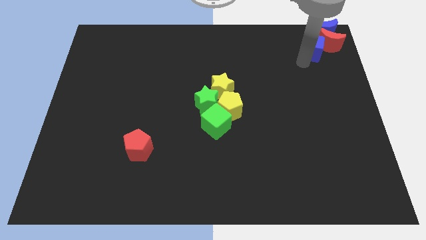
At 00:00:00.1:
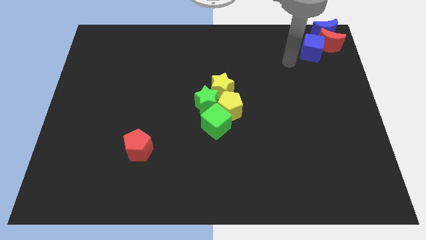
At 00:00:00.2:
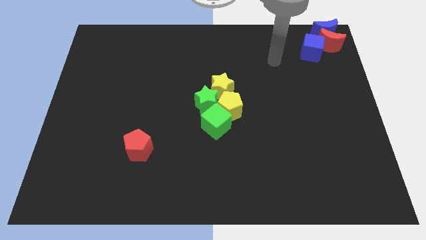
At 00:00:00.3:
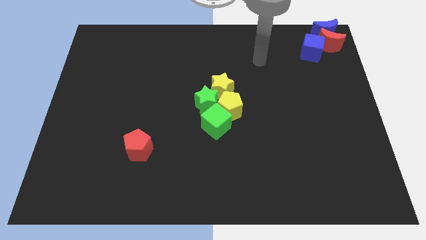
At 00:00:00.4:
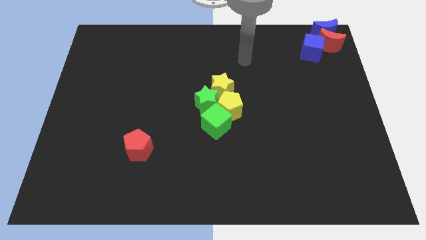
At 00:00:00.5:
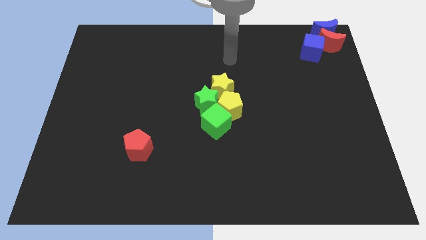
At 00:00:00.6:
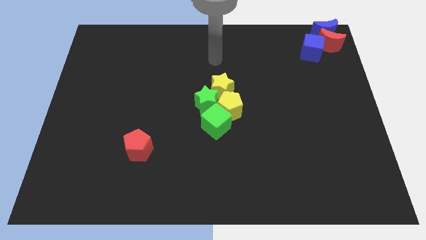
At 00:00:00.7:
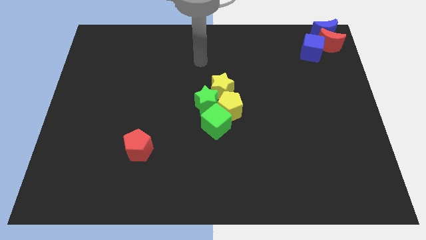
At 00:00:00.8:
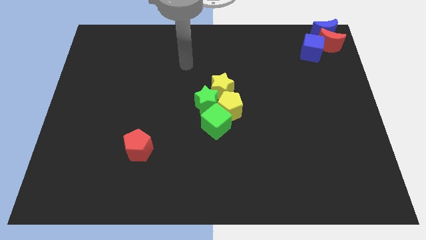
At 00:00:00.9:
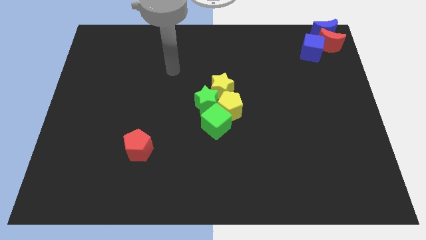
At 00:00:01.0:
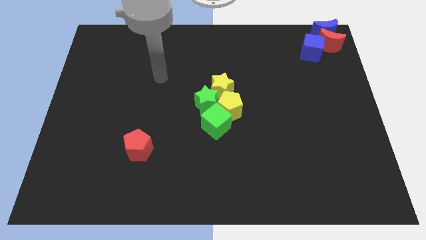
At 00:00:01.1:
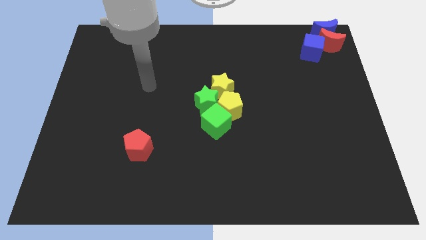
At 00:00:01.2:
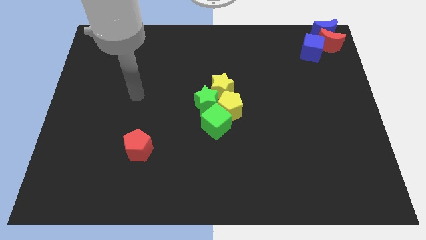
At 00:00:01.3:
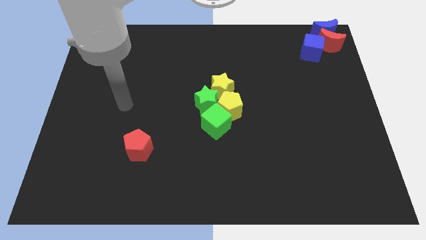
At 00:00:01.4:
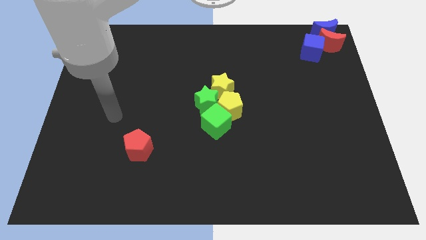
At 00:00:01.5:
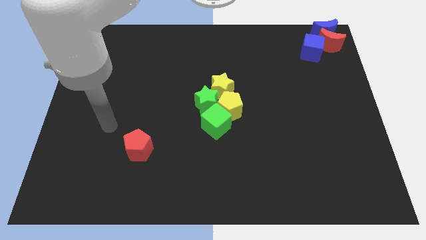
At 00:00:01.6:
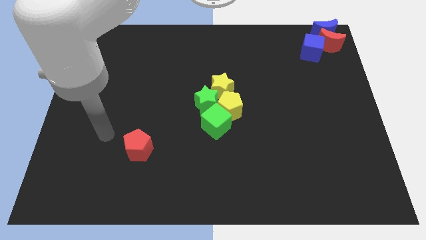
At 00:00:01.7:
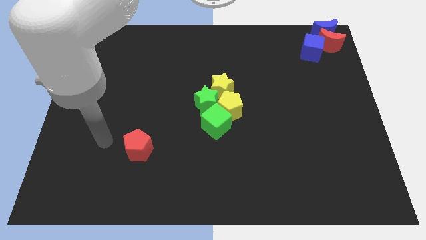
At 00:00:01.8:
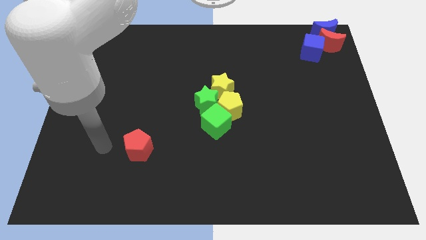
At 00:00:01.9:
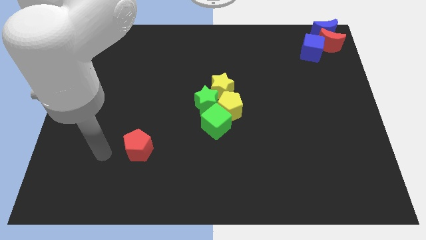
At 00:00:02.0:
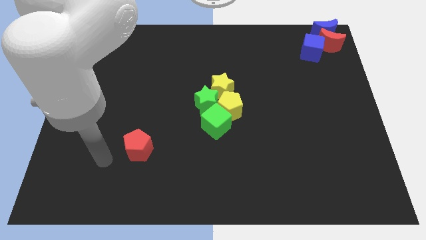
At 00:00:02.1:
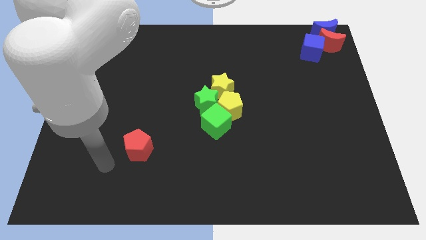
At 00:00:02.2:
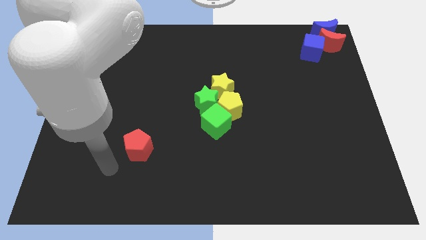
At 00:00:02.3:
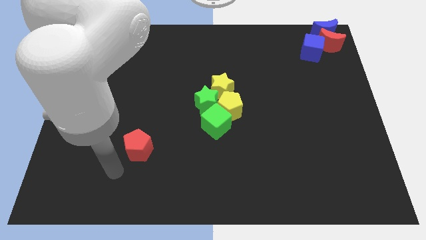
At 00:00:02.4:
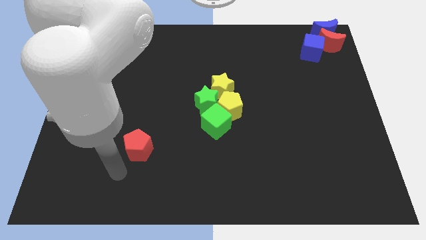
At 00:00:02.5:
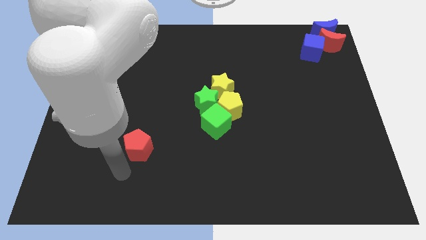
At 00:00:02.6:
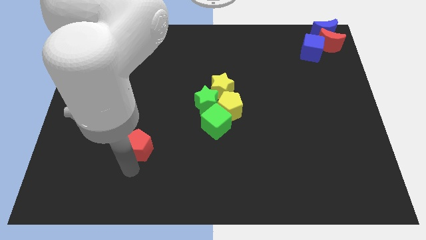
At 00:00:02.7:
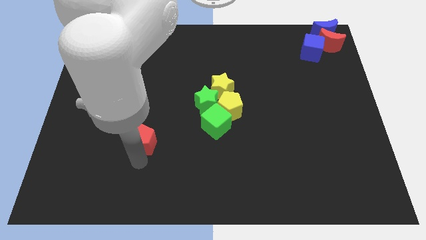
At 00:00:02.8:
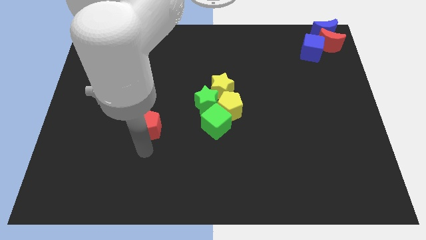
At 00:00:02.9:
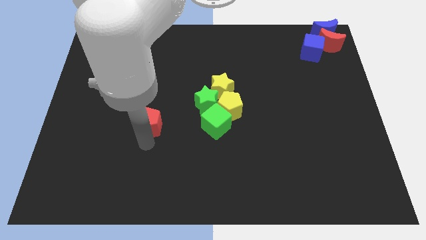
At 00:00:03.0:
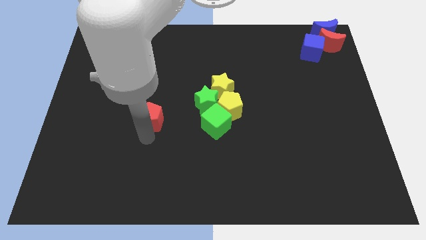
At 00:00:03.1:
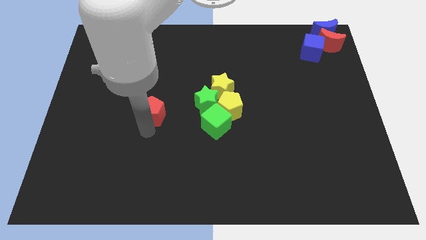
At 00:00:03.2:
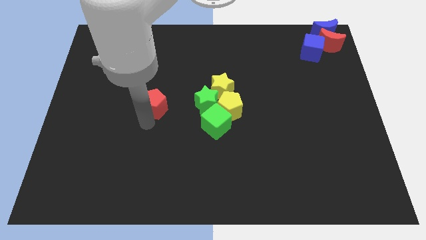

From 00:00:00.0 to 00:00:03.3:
slide the red pentagon to the left side of the green star

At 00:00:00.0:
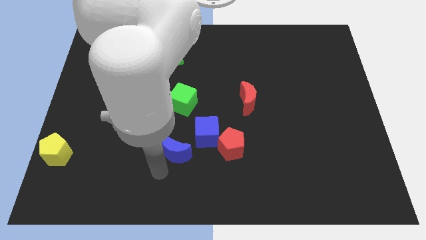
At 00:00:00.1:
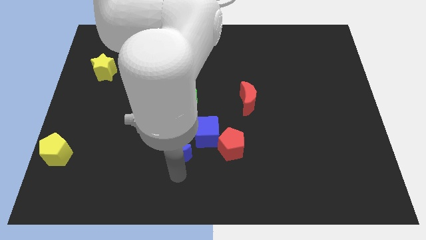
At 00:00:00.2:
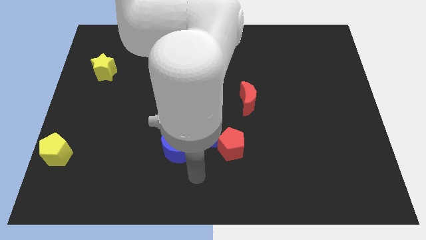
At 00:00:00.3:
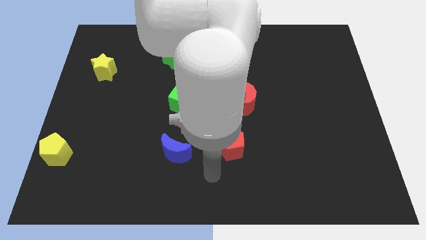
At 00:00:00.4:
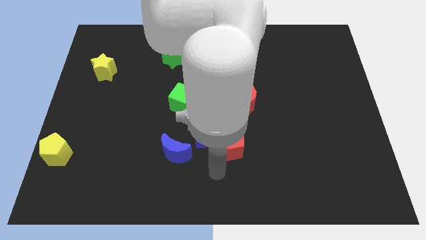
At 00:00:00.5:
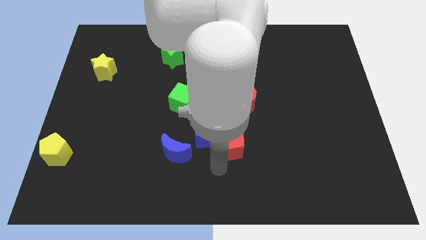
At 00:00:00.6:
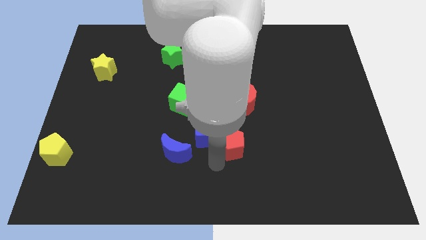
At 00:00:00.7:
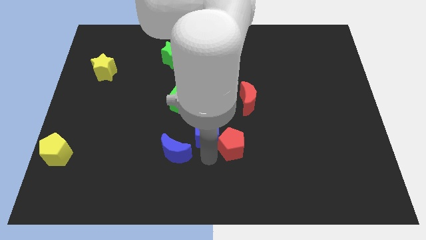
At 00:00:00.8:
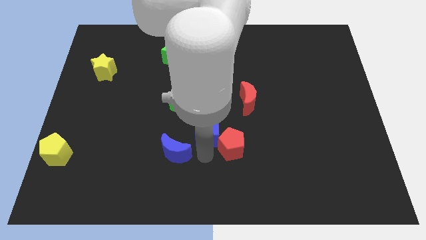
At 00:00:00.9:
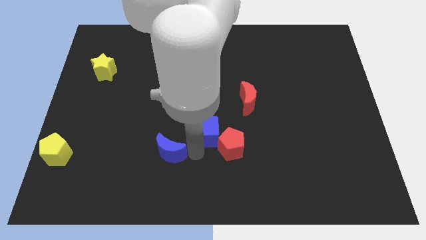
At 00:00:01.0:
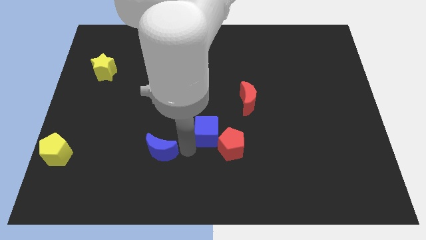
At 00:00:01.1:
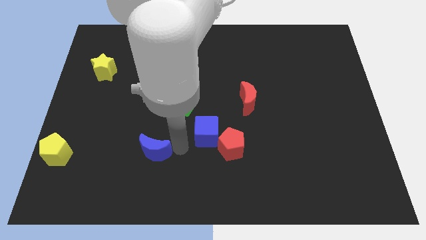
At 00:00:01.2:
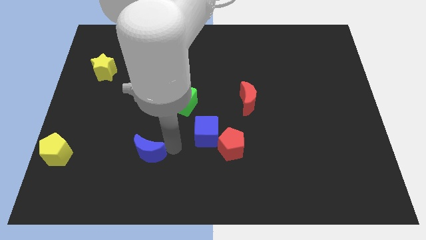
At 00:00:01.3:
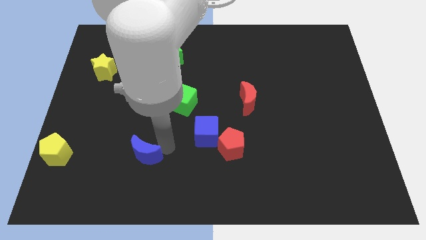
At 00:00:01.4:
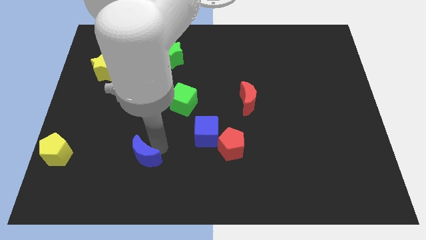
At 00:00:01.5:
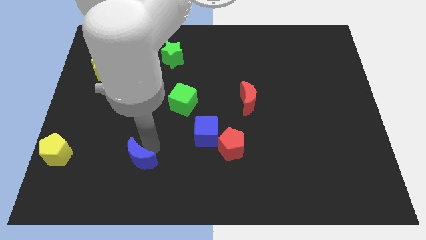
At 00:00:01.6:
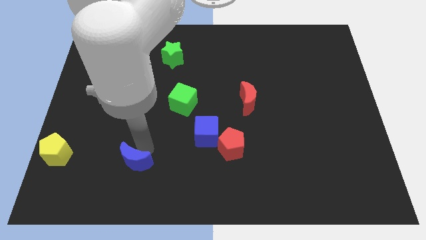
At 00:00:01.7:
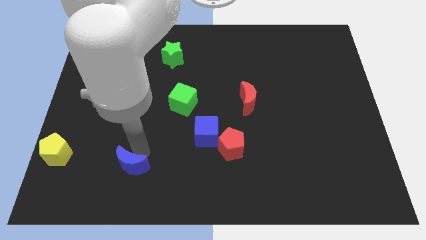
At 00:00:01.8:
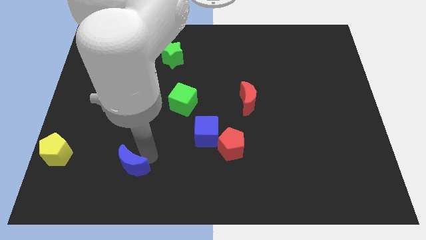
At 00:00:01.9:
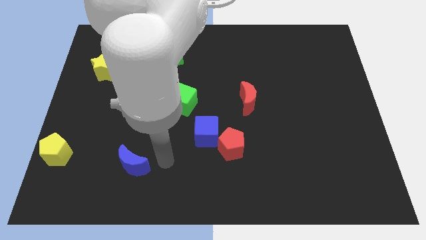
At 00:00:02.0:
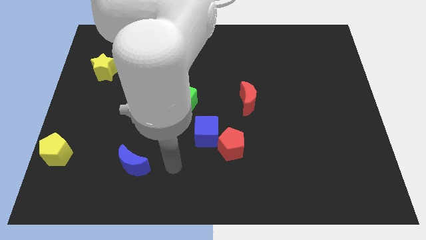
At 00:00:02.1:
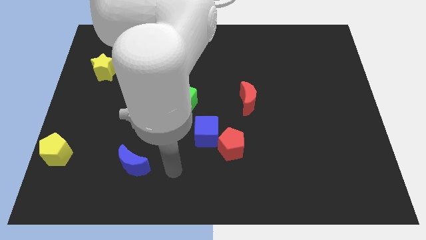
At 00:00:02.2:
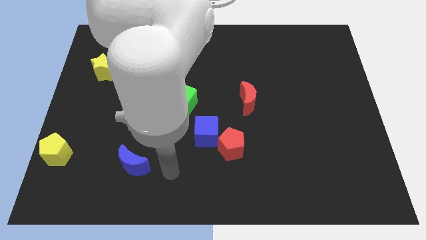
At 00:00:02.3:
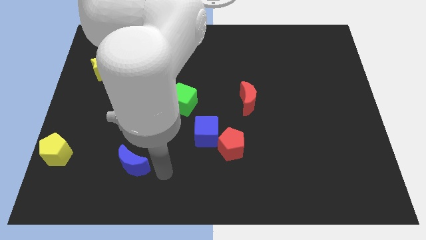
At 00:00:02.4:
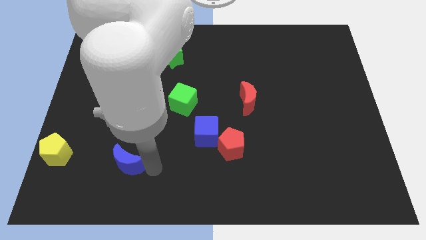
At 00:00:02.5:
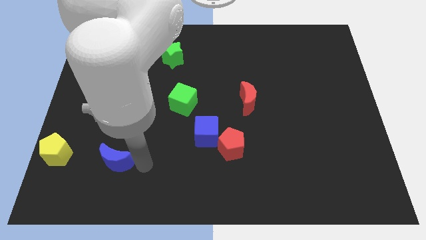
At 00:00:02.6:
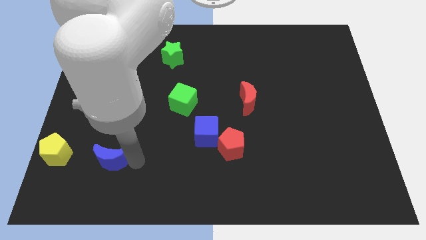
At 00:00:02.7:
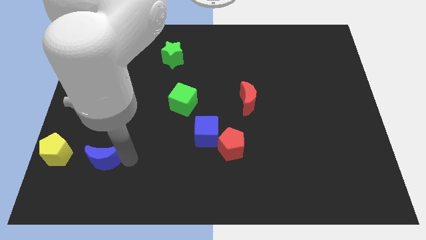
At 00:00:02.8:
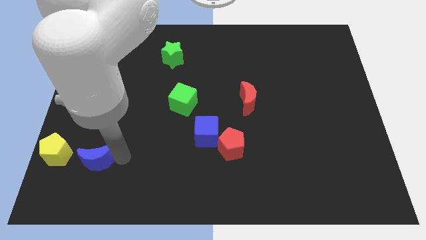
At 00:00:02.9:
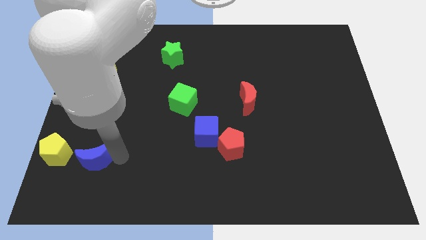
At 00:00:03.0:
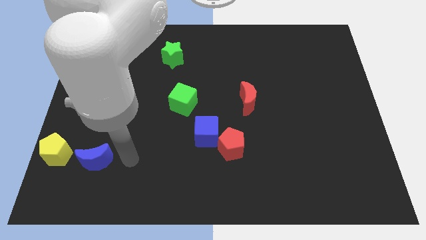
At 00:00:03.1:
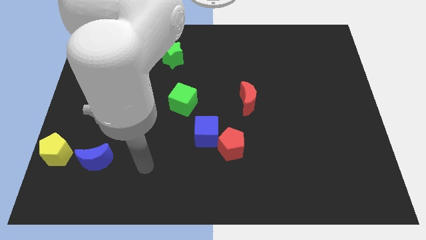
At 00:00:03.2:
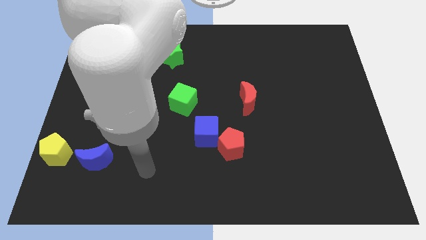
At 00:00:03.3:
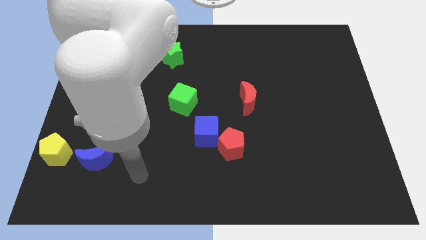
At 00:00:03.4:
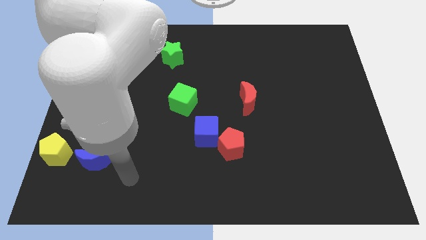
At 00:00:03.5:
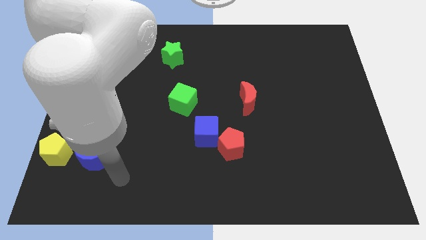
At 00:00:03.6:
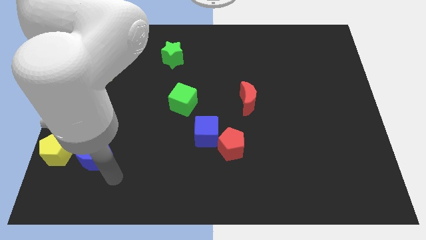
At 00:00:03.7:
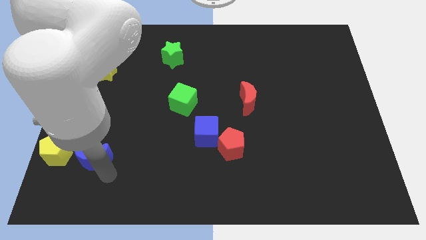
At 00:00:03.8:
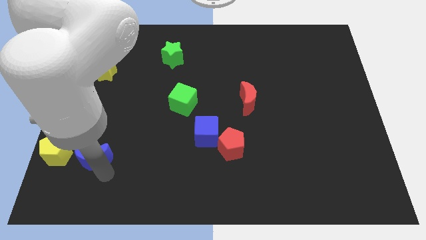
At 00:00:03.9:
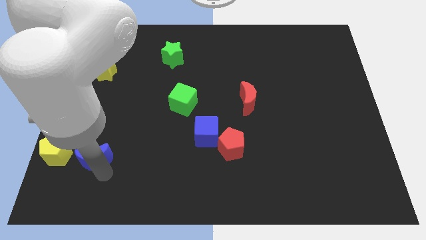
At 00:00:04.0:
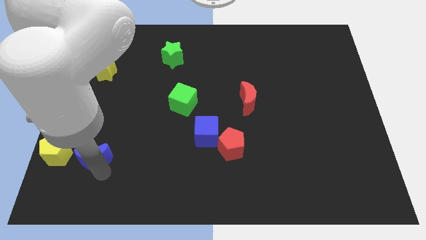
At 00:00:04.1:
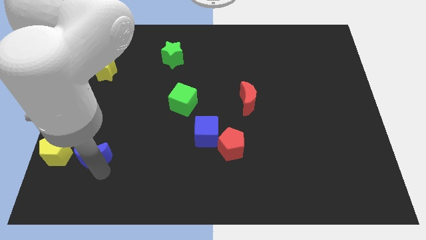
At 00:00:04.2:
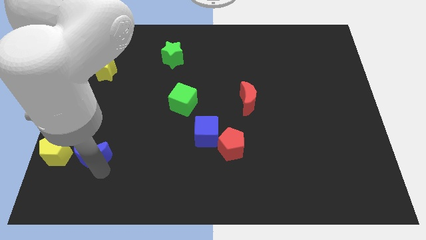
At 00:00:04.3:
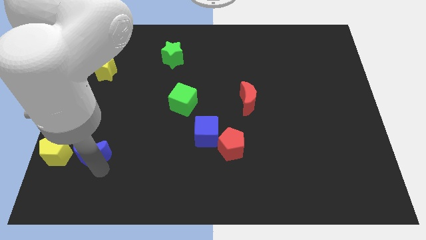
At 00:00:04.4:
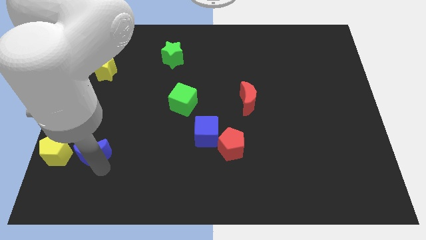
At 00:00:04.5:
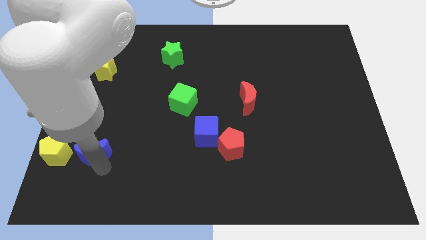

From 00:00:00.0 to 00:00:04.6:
push the blue moon to the right side of the yellow pentagon

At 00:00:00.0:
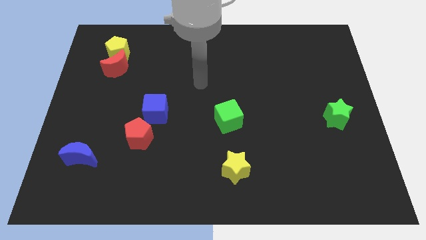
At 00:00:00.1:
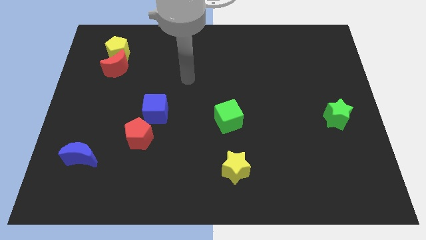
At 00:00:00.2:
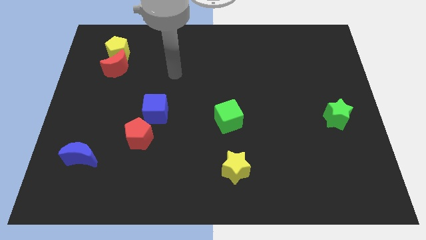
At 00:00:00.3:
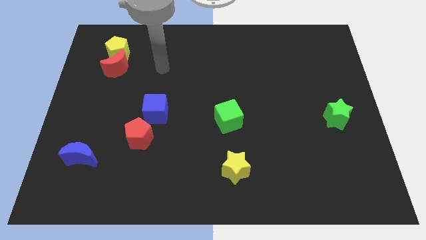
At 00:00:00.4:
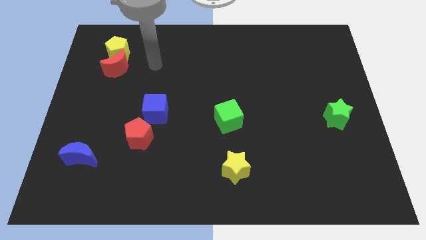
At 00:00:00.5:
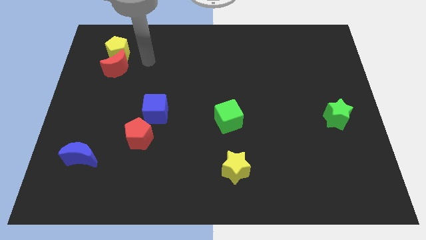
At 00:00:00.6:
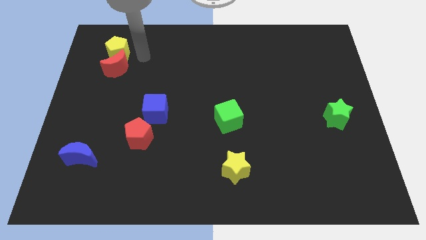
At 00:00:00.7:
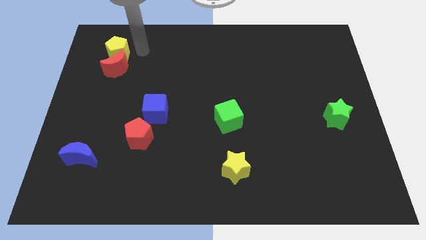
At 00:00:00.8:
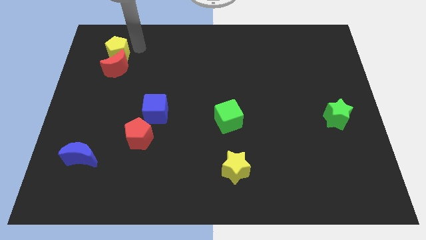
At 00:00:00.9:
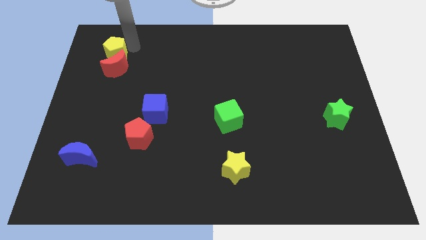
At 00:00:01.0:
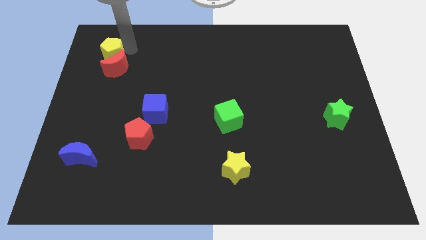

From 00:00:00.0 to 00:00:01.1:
move your arm to the right side of the yellow pentagon
